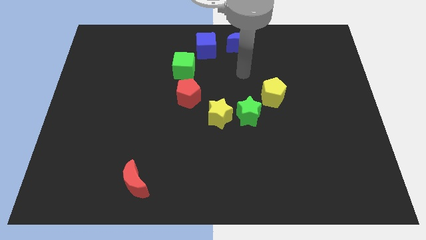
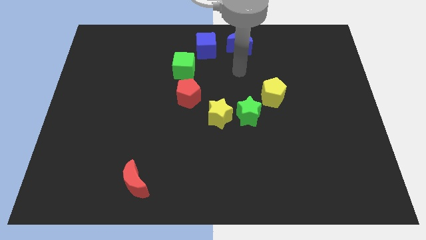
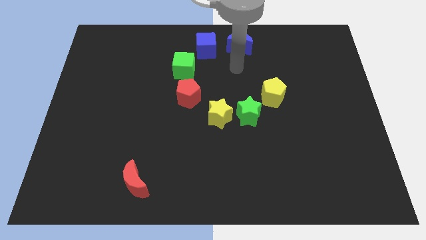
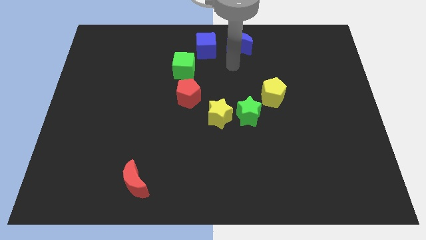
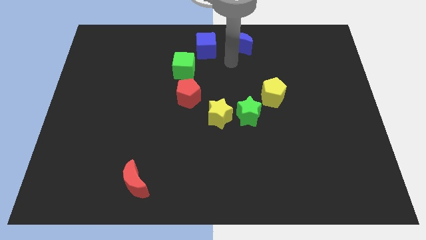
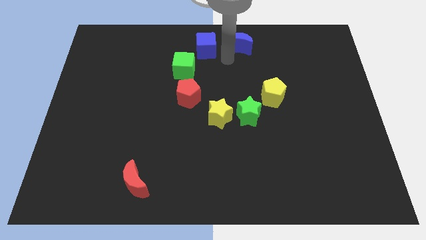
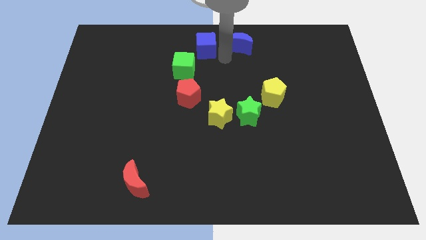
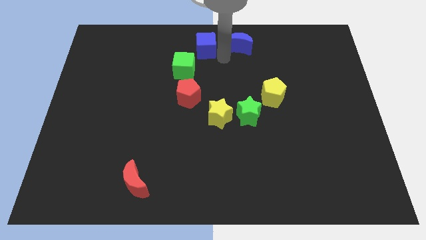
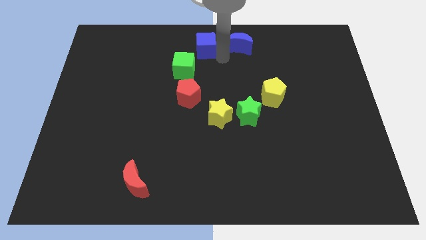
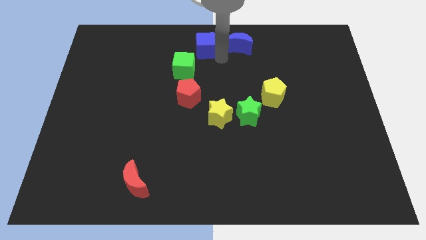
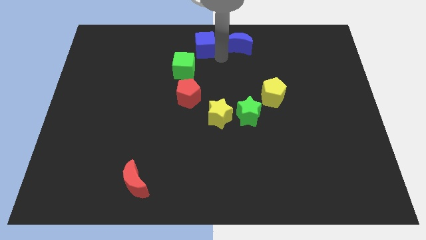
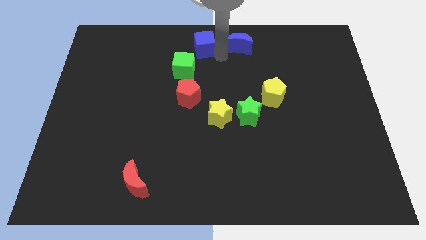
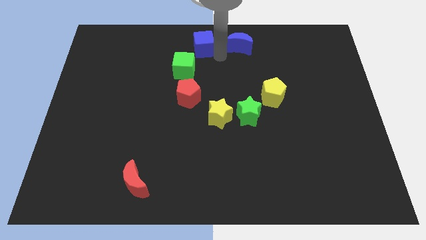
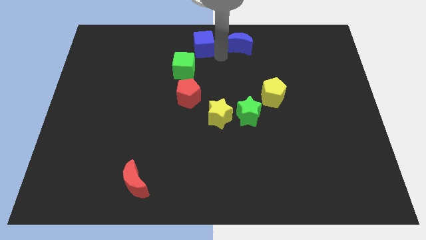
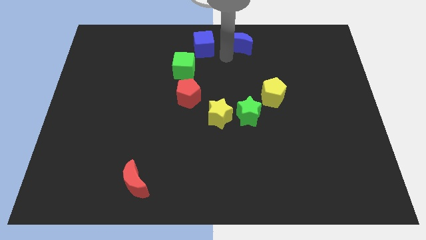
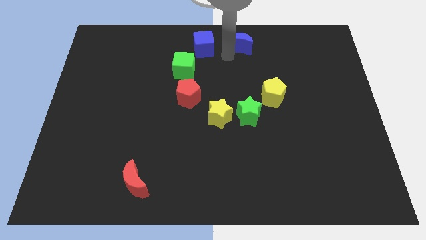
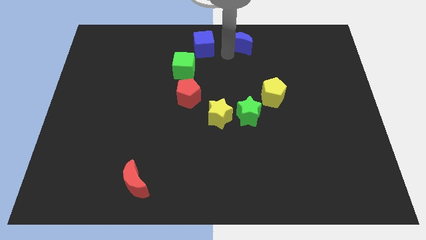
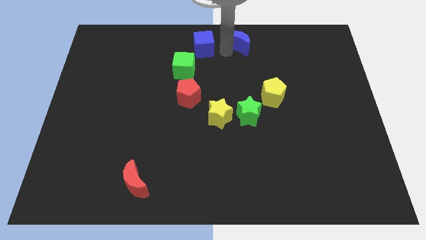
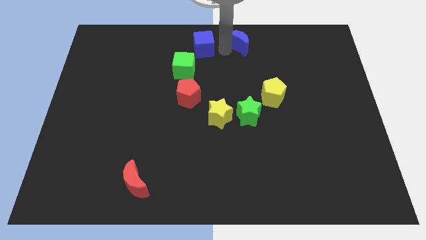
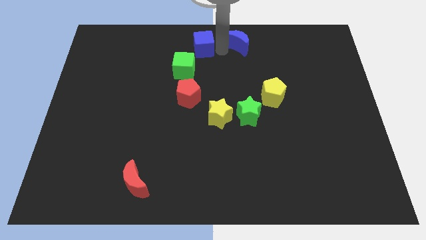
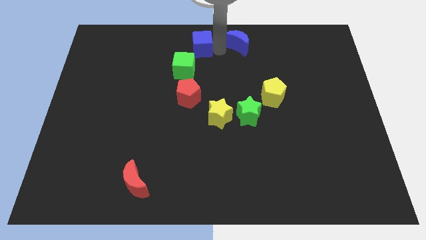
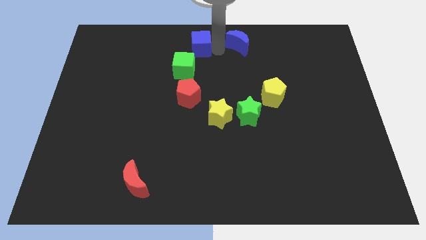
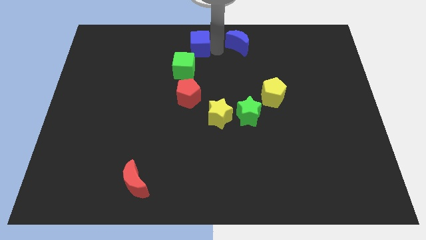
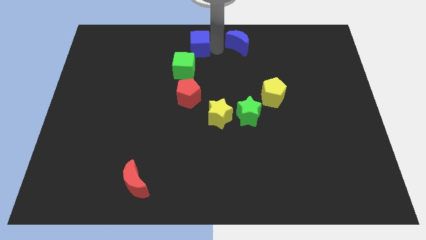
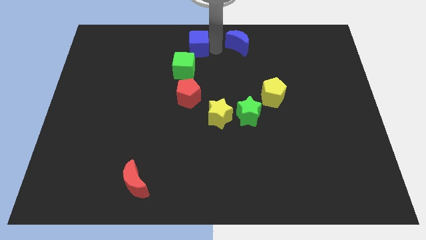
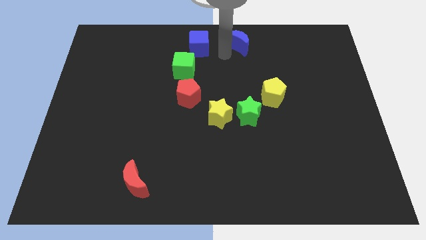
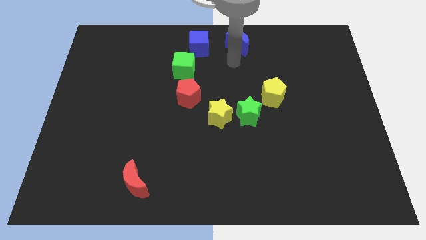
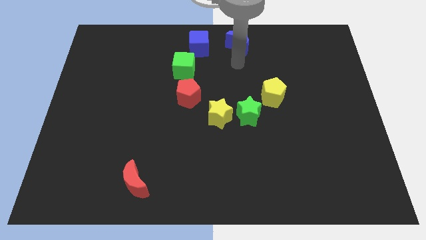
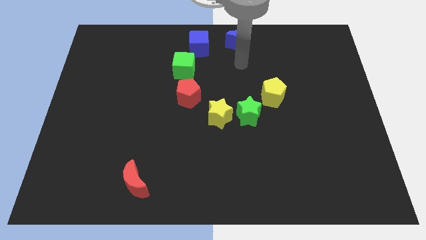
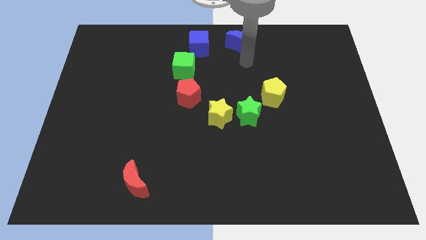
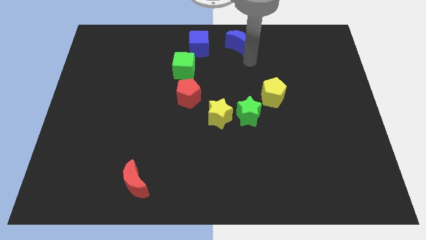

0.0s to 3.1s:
move the blue cube slightly towards left center

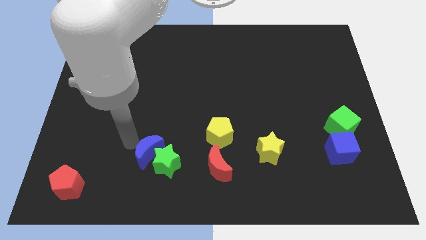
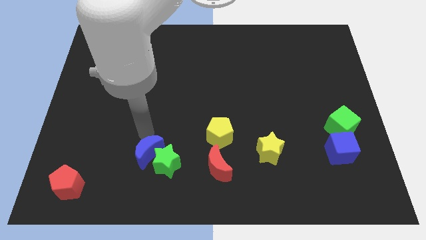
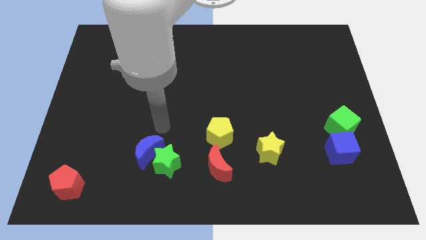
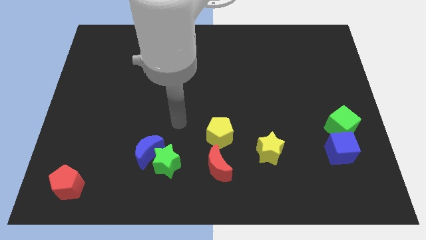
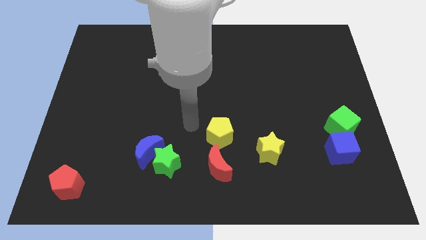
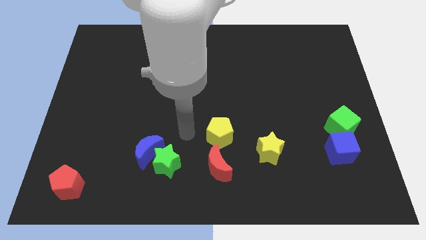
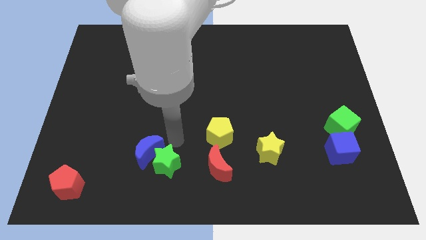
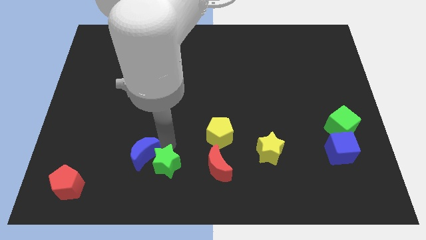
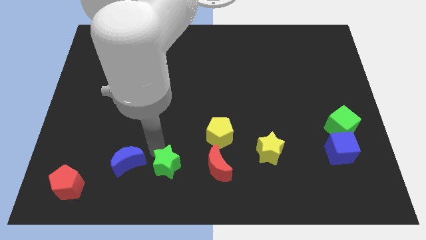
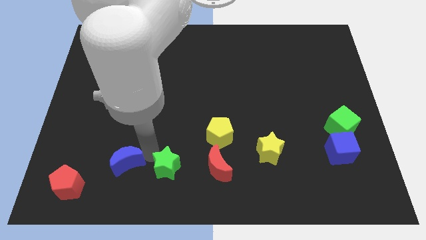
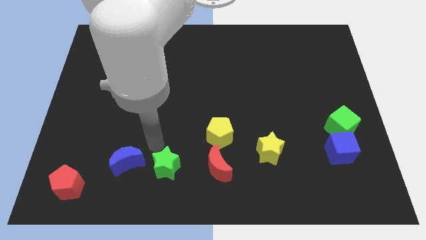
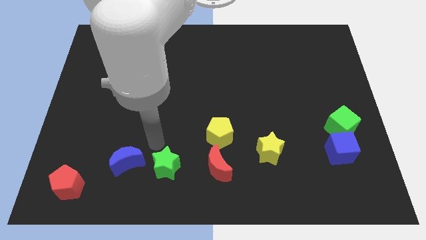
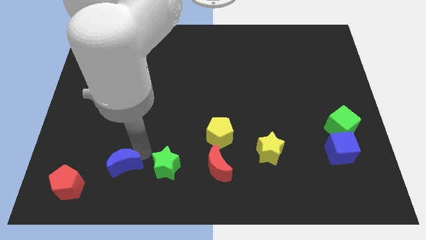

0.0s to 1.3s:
separate the blue crescent from the green star

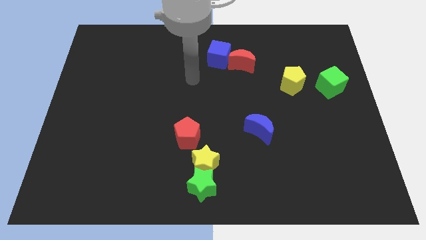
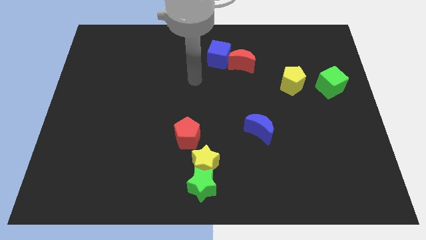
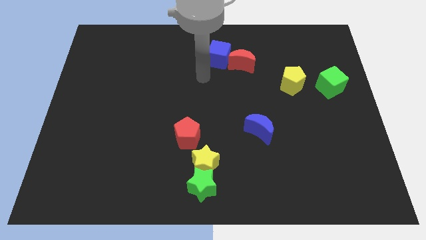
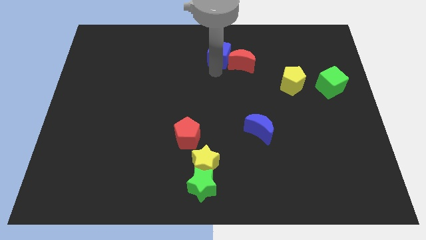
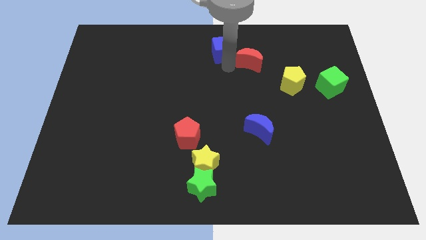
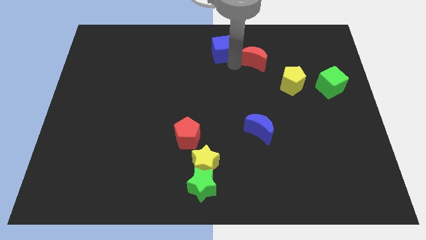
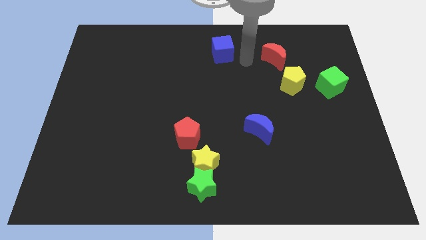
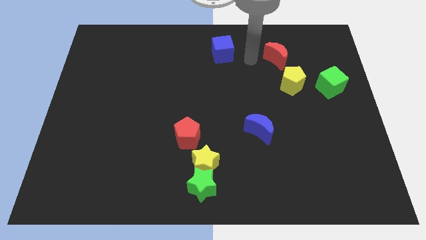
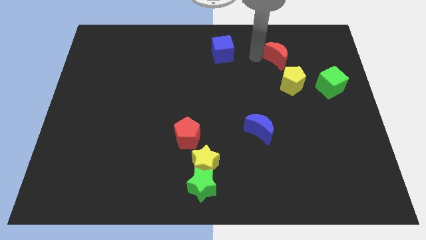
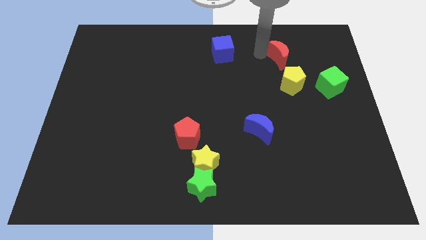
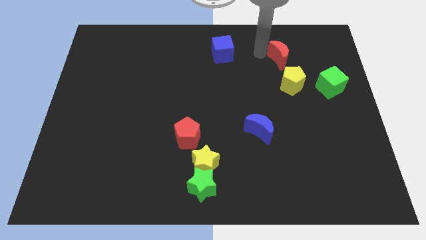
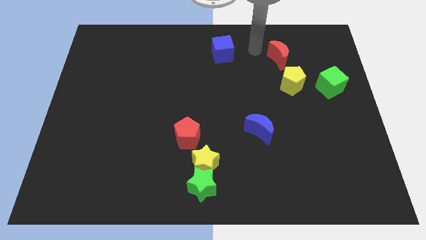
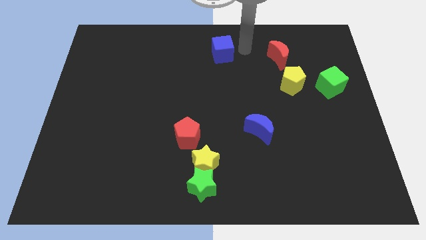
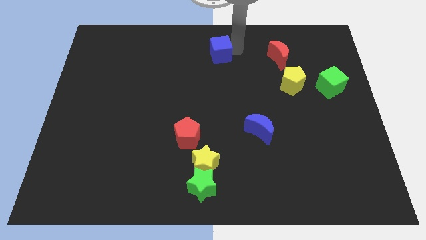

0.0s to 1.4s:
slide the red moon diagonally top left to yellow pentagon

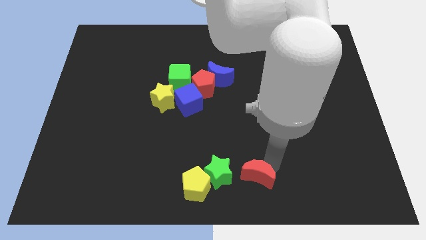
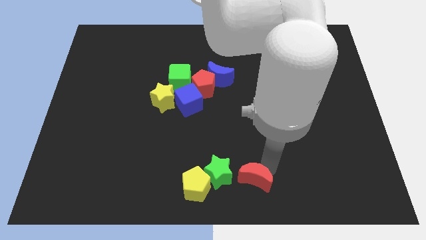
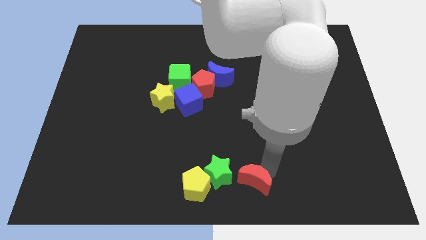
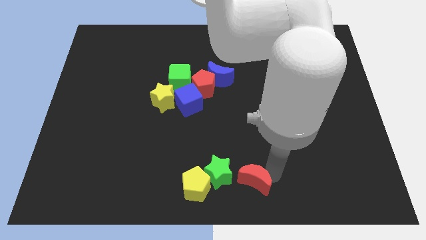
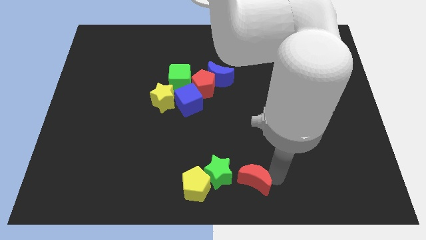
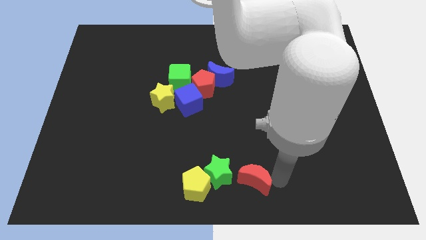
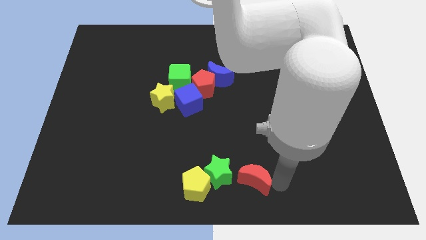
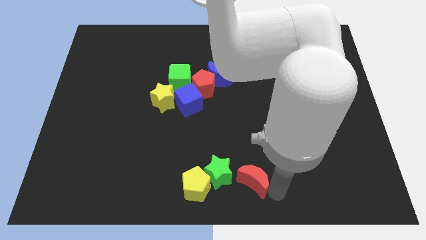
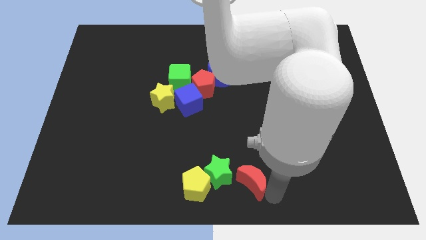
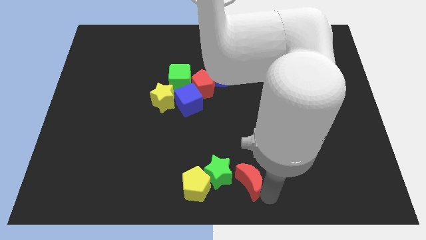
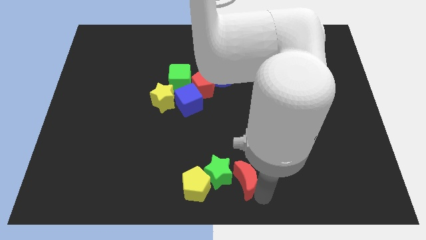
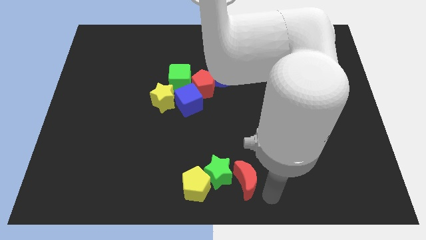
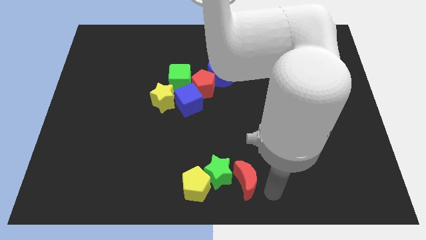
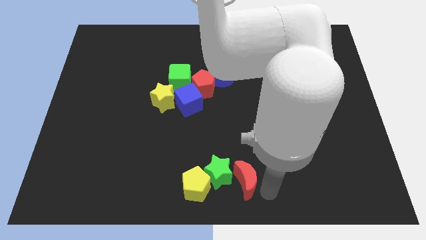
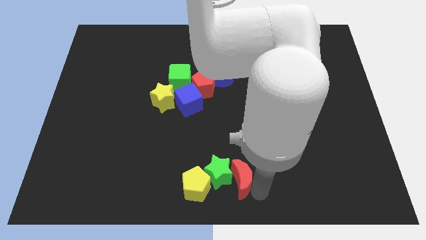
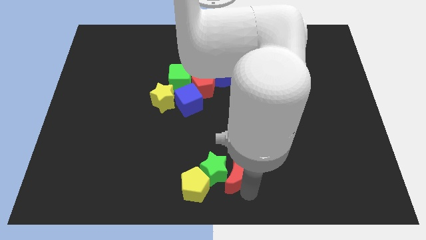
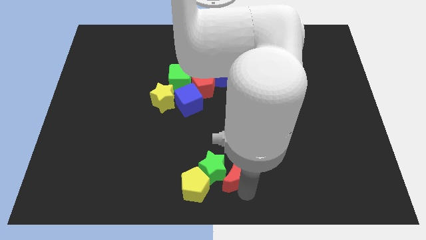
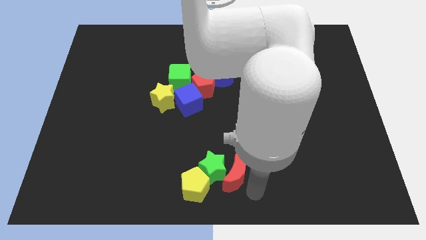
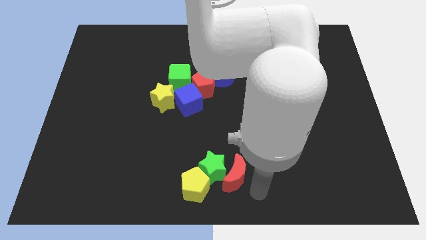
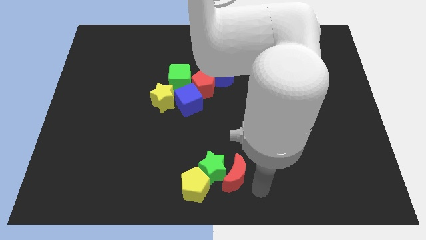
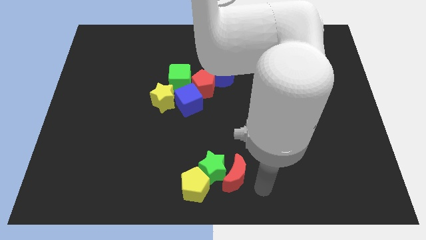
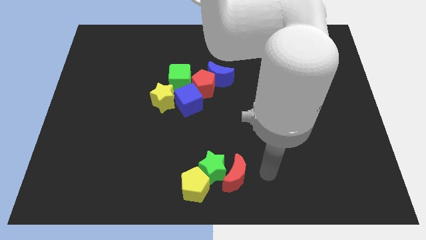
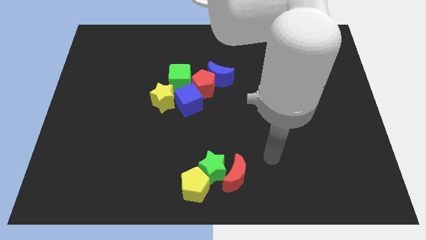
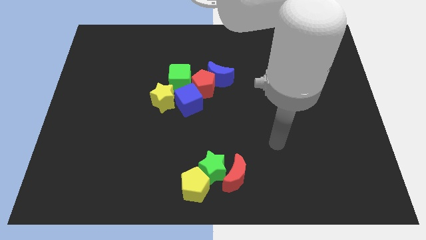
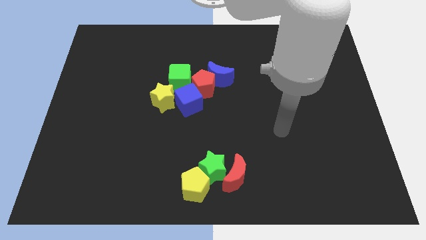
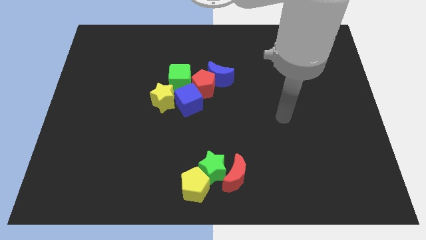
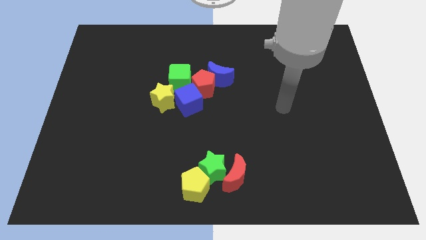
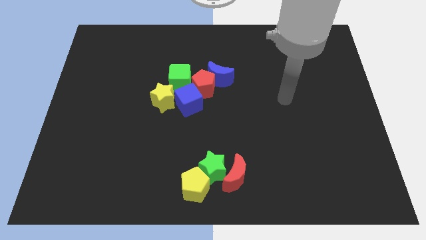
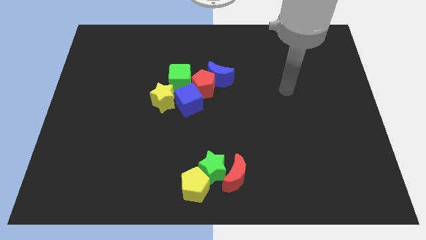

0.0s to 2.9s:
move red crescent into green star

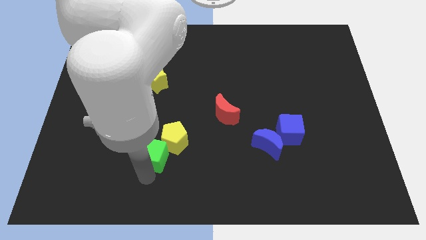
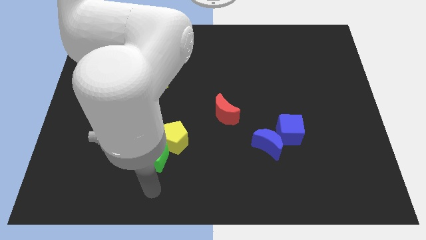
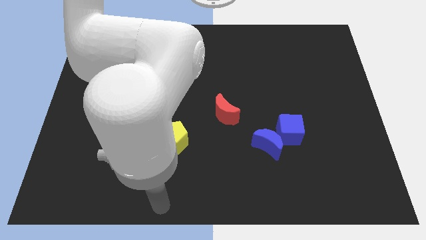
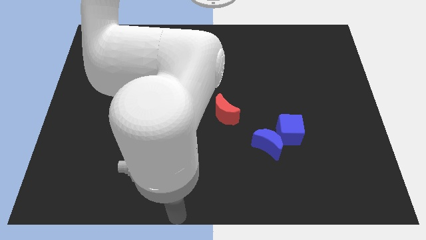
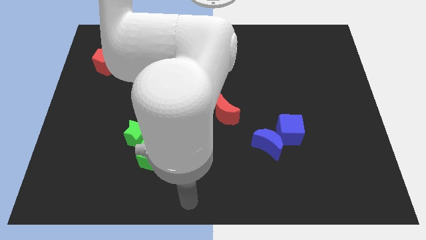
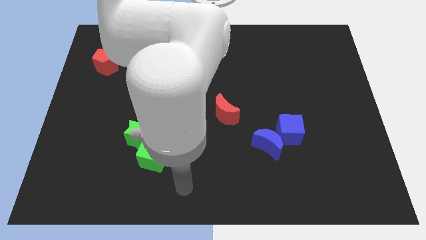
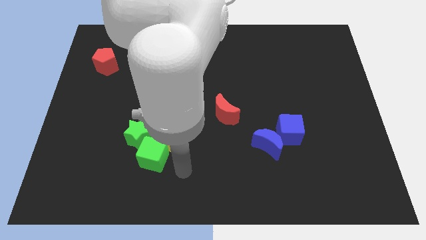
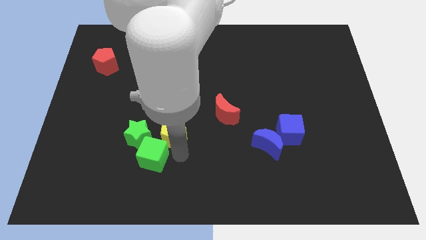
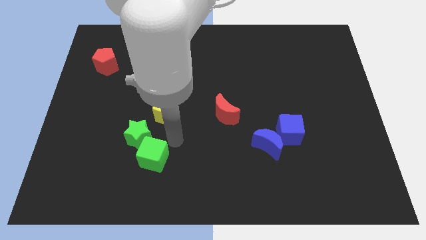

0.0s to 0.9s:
touch the bottom yellow pentagon
